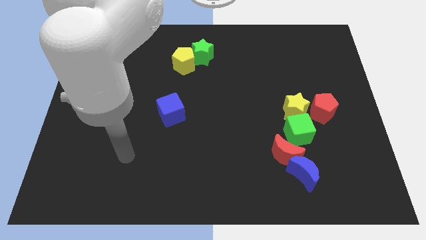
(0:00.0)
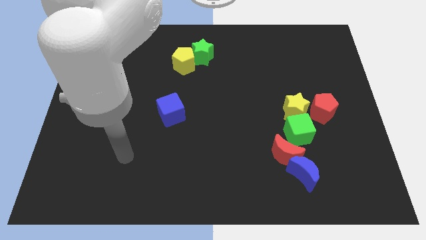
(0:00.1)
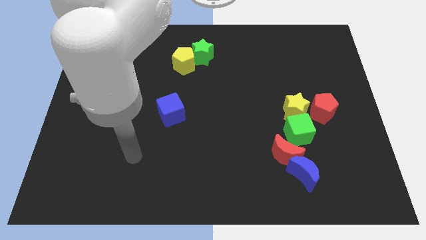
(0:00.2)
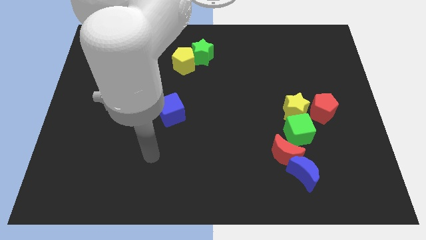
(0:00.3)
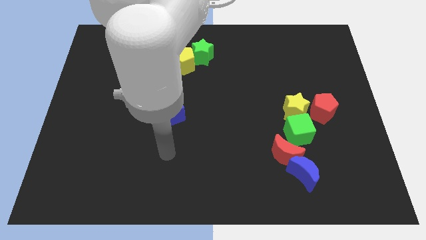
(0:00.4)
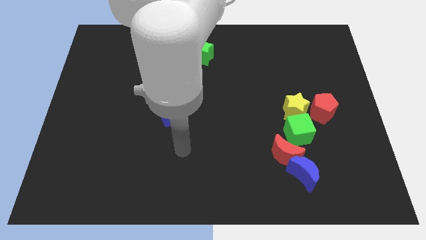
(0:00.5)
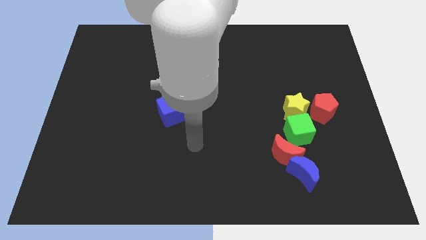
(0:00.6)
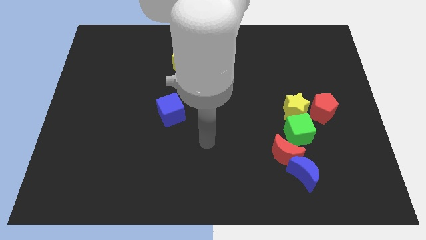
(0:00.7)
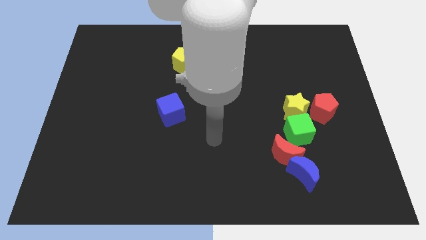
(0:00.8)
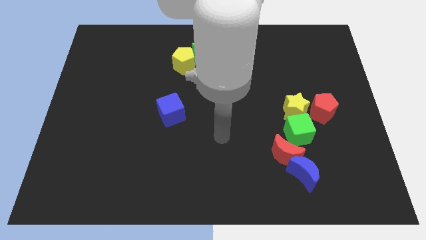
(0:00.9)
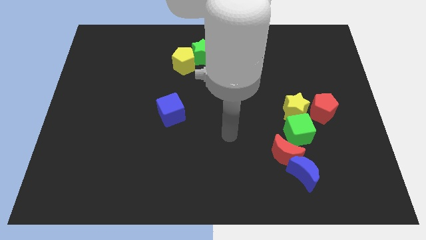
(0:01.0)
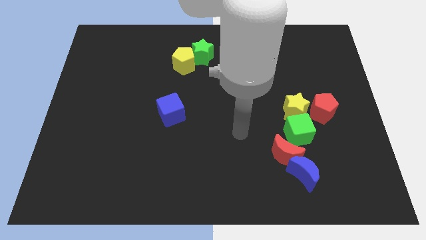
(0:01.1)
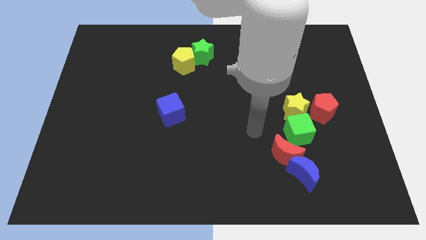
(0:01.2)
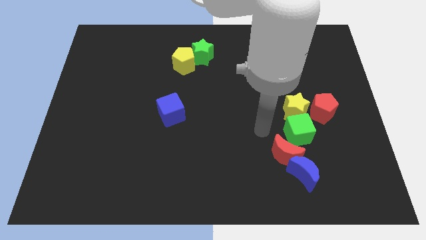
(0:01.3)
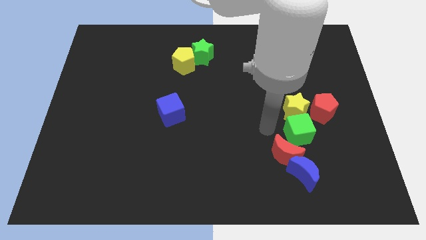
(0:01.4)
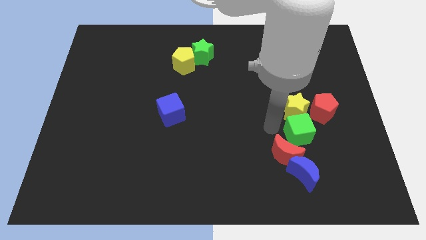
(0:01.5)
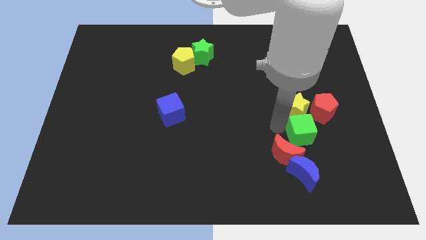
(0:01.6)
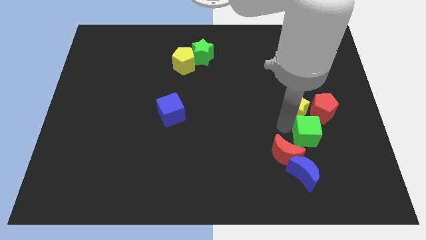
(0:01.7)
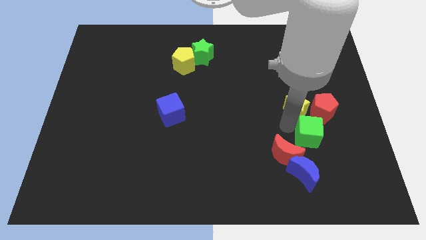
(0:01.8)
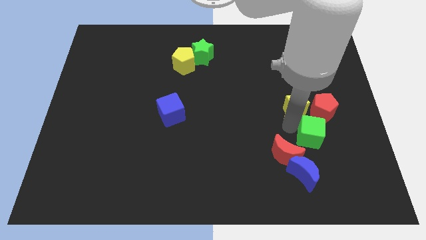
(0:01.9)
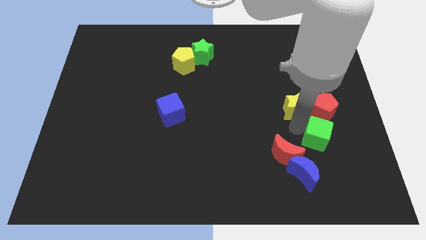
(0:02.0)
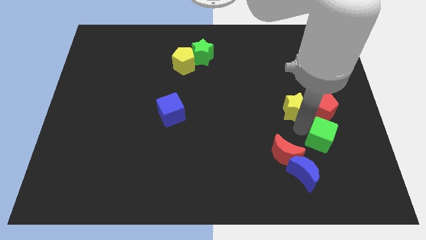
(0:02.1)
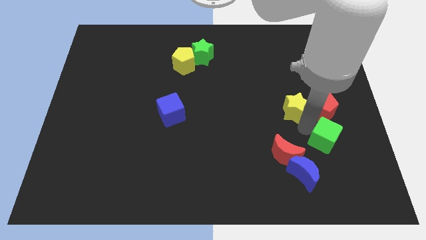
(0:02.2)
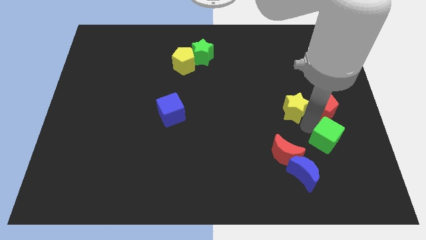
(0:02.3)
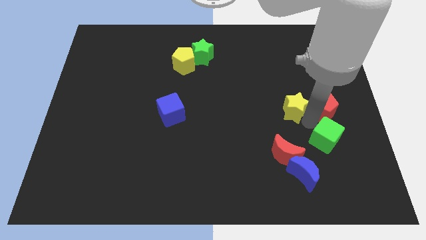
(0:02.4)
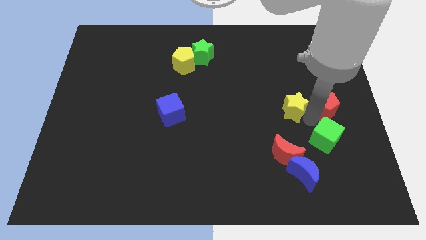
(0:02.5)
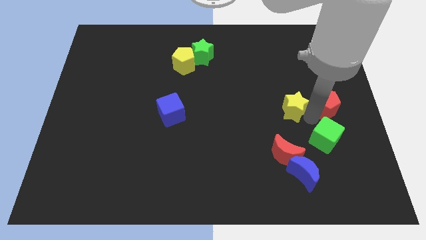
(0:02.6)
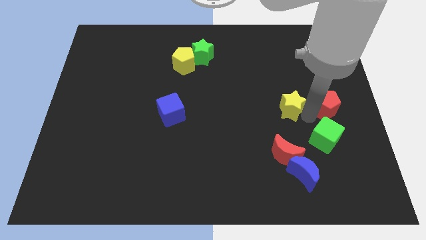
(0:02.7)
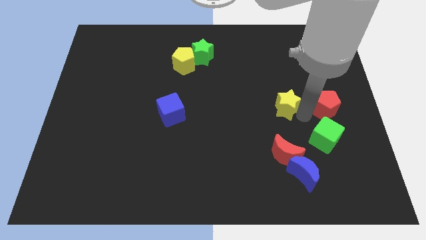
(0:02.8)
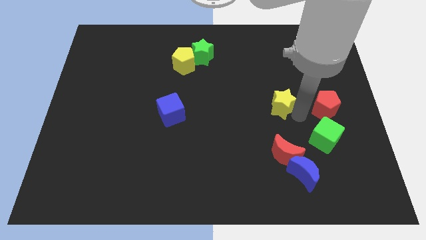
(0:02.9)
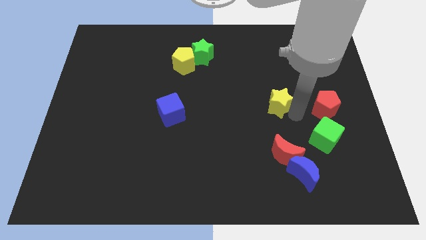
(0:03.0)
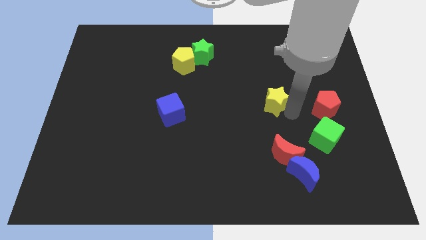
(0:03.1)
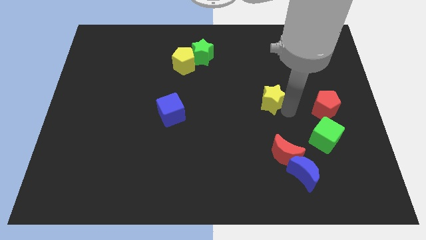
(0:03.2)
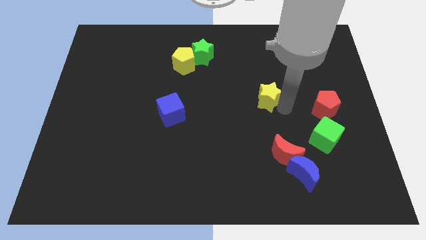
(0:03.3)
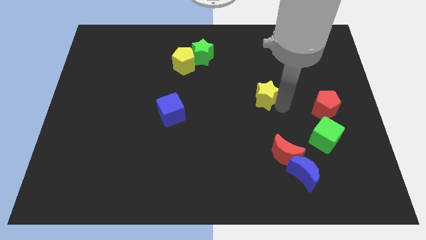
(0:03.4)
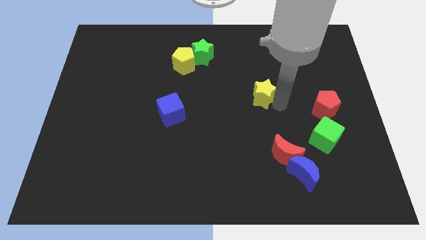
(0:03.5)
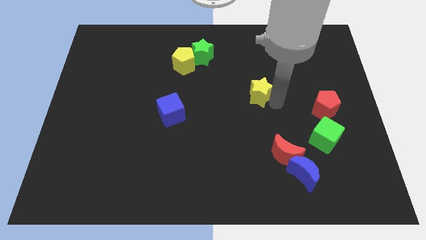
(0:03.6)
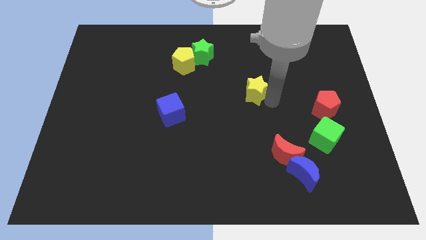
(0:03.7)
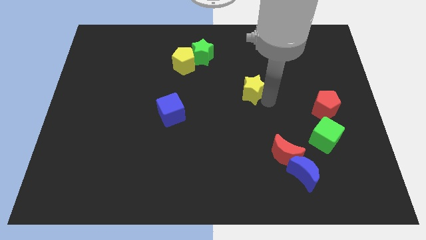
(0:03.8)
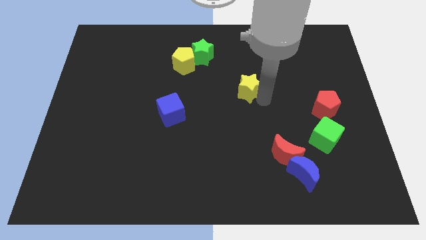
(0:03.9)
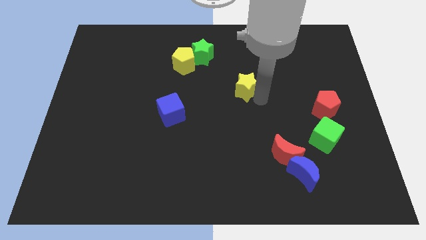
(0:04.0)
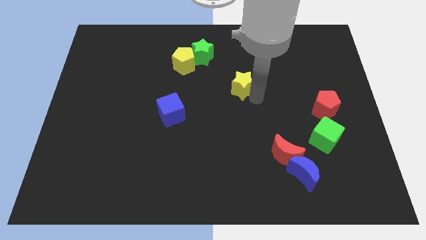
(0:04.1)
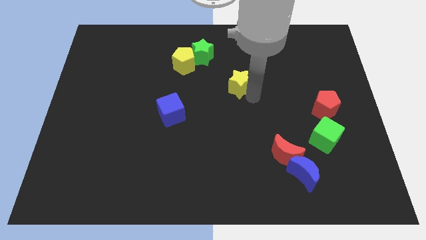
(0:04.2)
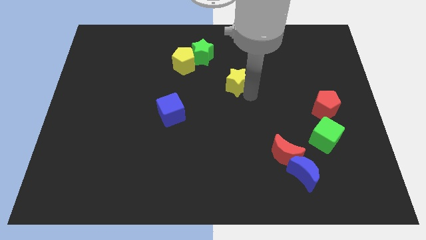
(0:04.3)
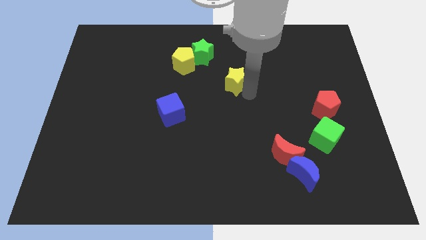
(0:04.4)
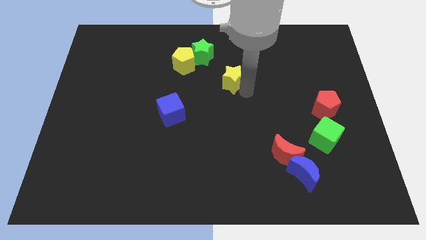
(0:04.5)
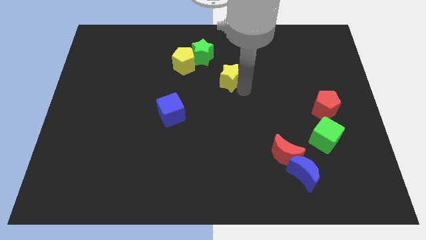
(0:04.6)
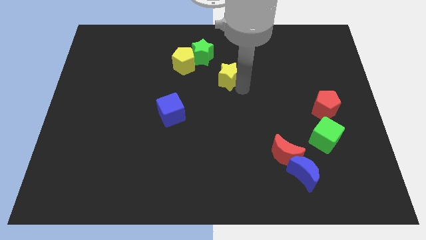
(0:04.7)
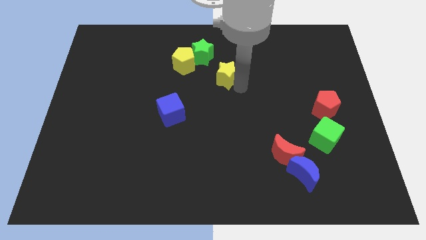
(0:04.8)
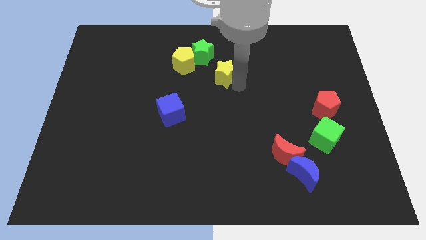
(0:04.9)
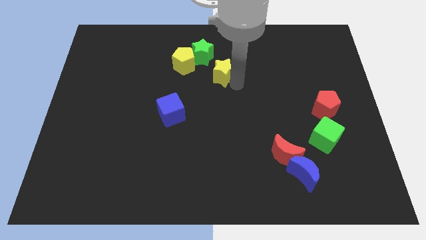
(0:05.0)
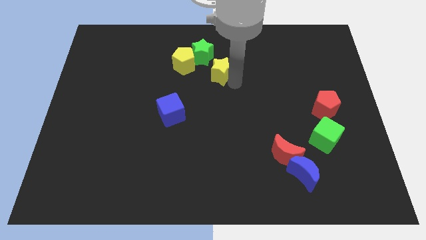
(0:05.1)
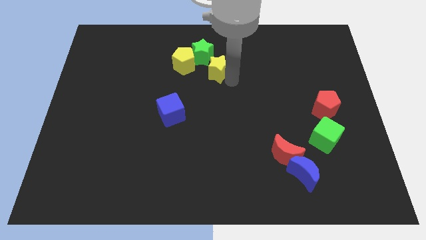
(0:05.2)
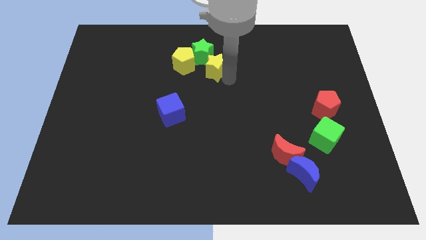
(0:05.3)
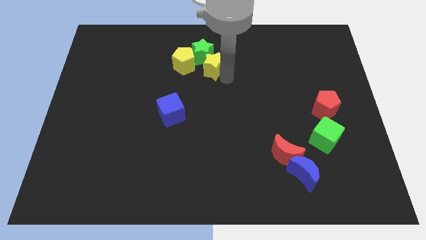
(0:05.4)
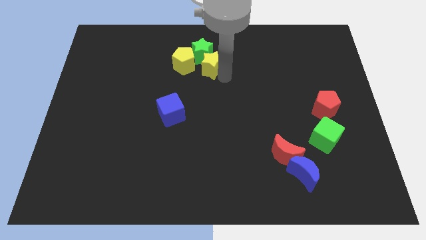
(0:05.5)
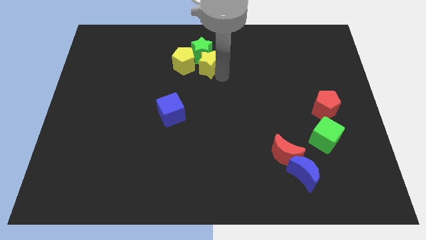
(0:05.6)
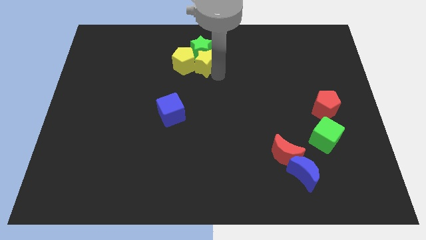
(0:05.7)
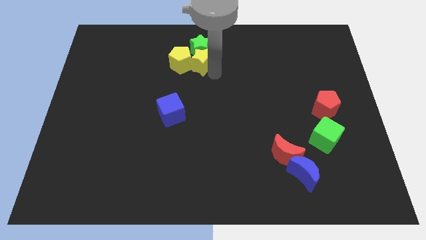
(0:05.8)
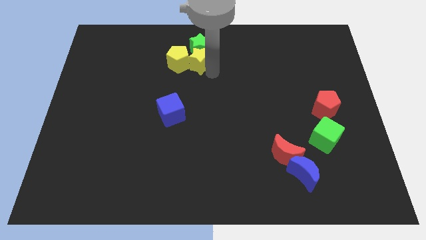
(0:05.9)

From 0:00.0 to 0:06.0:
put the yellow star towards the yellow pentagon

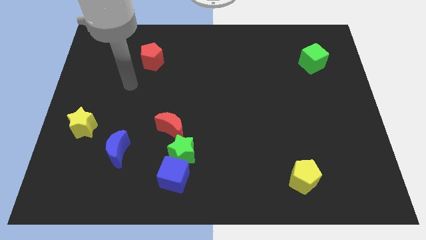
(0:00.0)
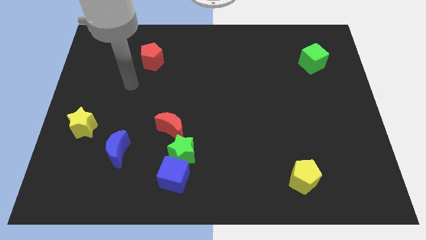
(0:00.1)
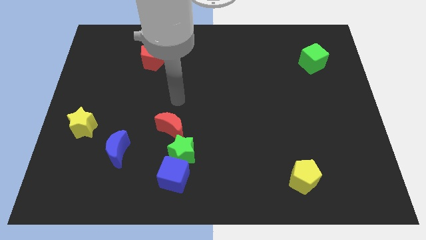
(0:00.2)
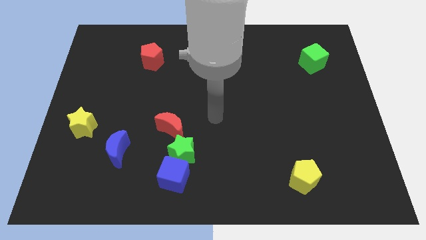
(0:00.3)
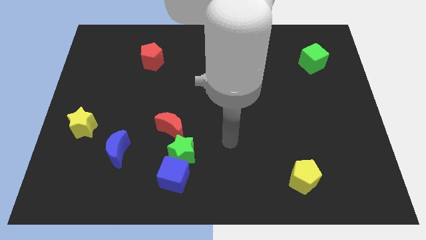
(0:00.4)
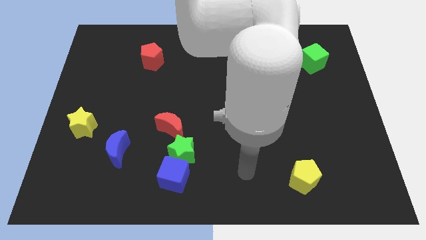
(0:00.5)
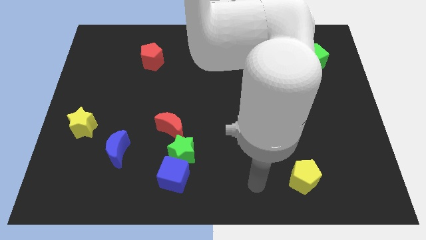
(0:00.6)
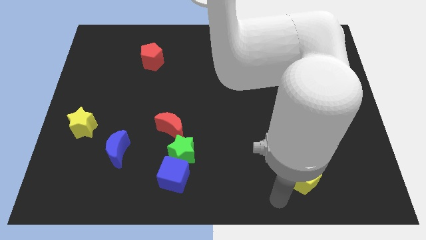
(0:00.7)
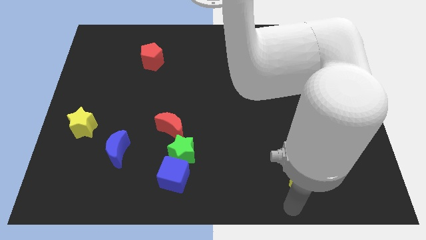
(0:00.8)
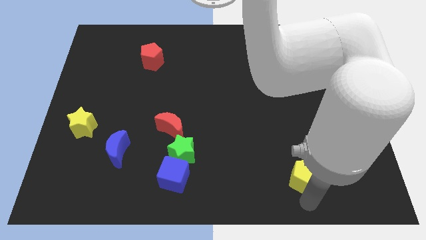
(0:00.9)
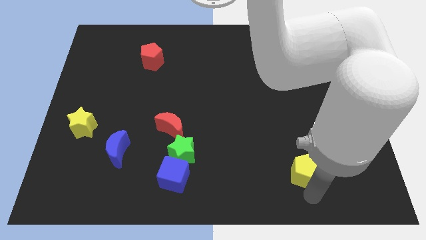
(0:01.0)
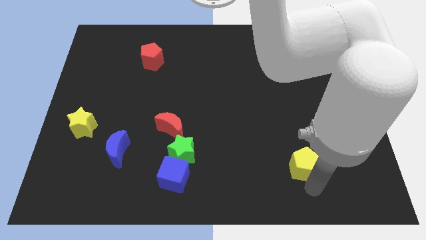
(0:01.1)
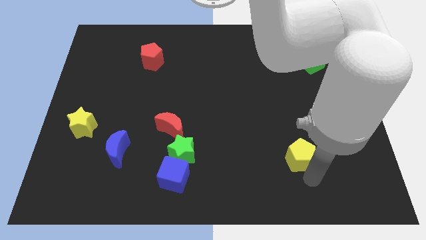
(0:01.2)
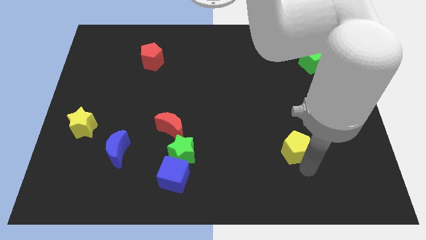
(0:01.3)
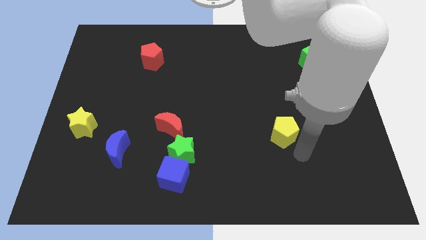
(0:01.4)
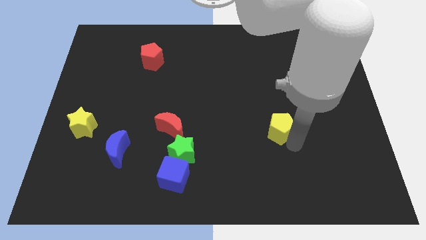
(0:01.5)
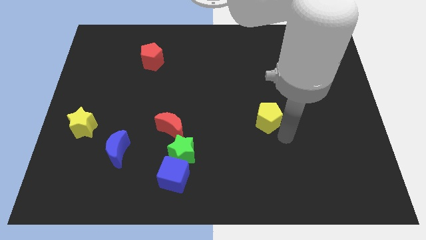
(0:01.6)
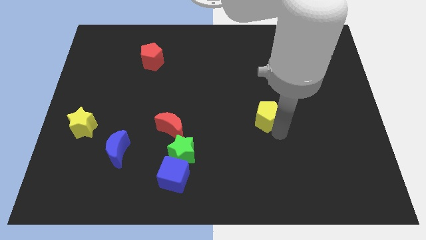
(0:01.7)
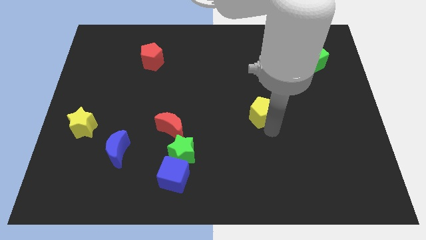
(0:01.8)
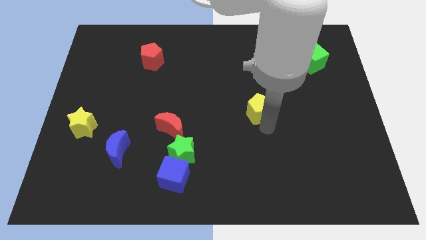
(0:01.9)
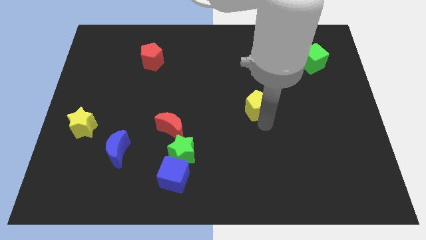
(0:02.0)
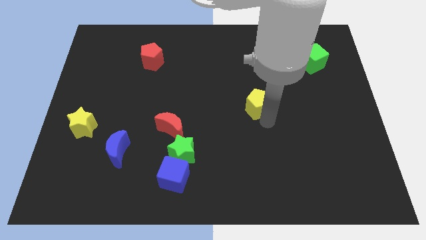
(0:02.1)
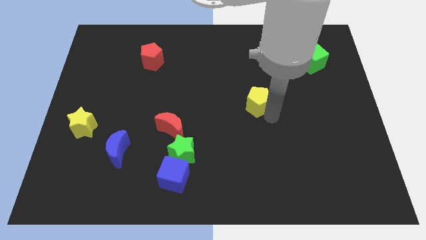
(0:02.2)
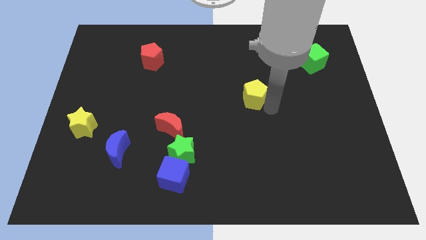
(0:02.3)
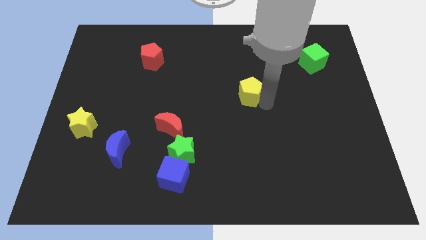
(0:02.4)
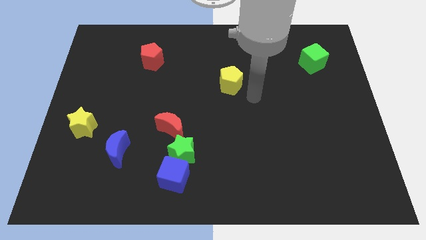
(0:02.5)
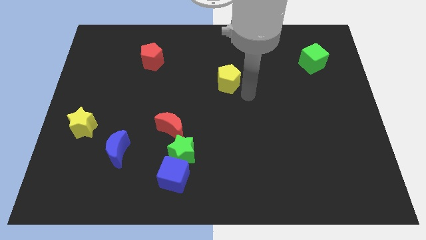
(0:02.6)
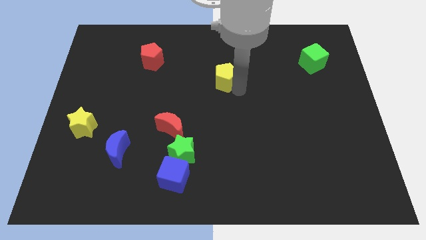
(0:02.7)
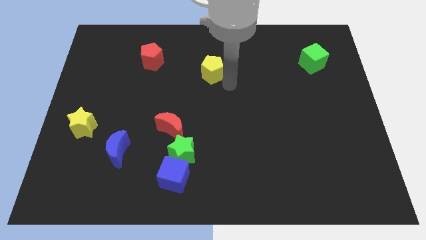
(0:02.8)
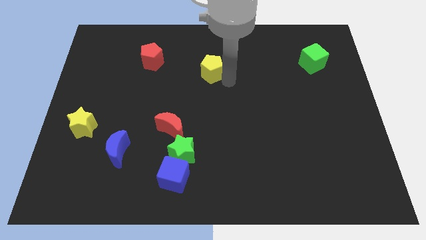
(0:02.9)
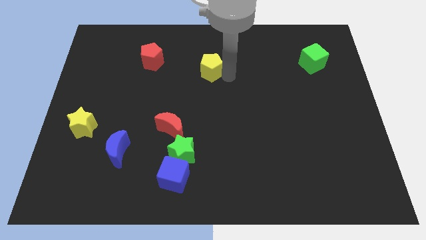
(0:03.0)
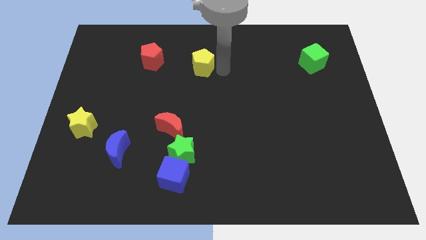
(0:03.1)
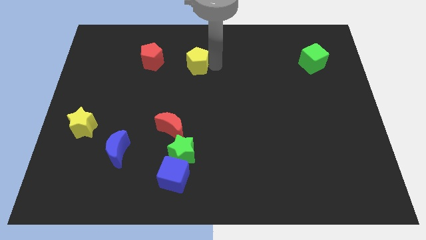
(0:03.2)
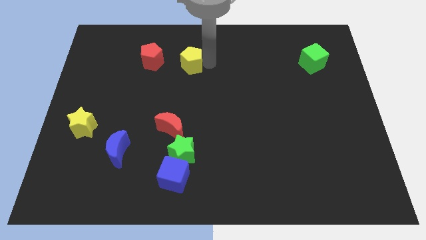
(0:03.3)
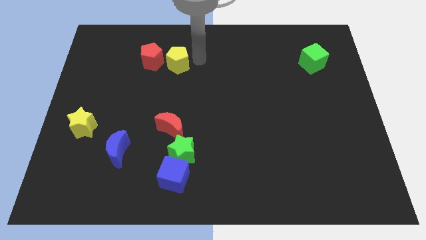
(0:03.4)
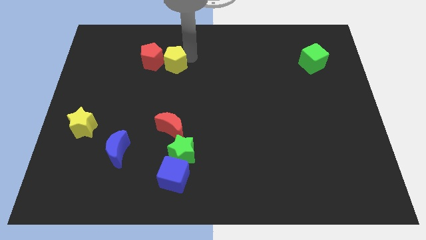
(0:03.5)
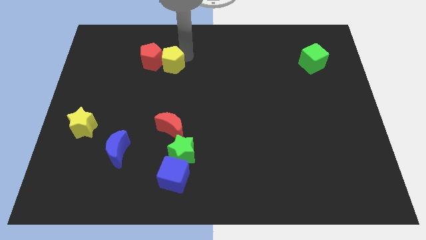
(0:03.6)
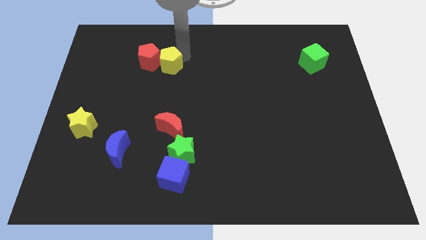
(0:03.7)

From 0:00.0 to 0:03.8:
move the yellow pentagon close to the red pentagon
